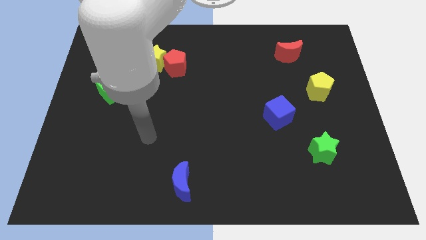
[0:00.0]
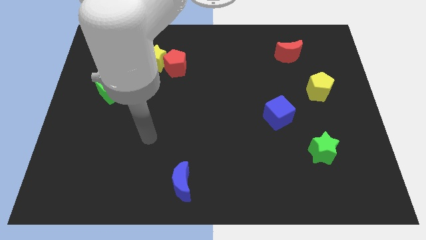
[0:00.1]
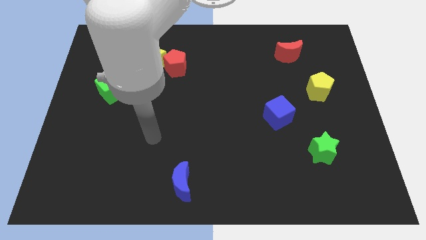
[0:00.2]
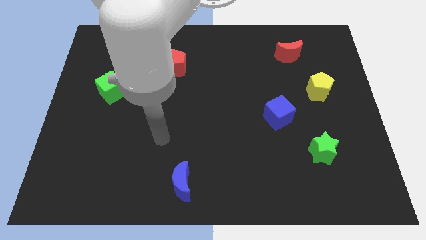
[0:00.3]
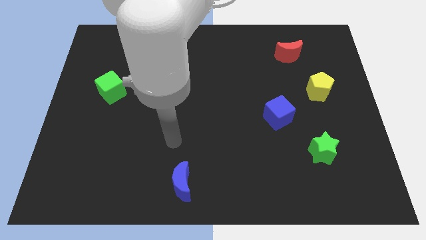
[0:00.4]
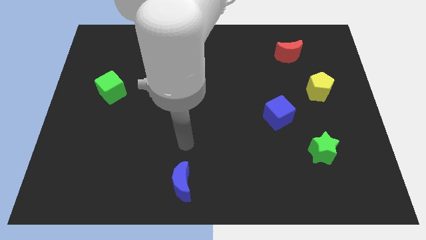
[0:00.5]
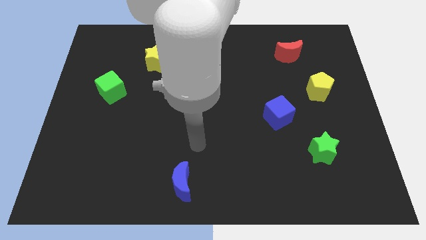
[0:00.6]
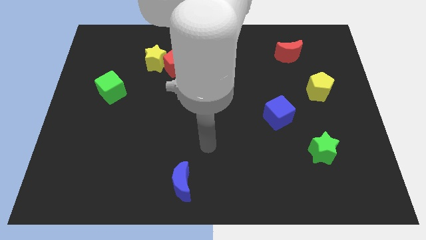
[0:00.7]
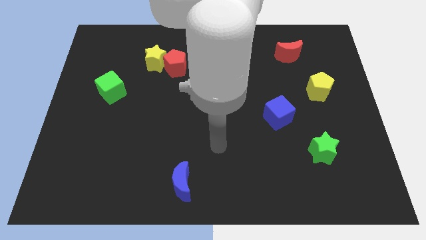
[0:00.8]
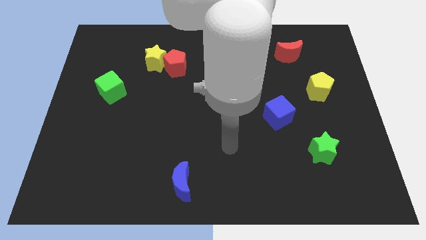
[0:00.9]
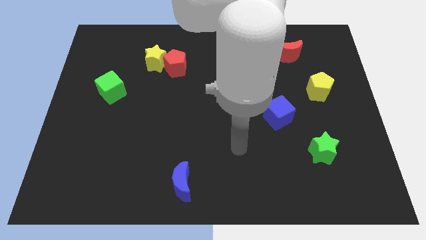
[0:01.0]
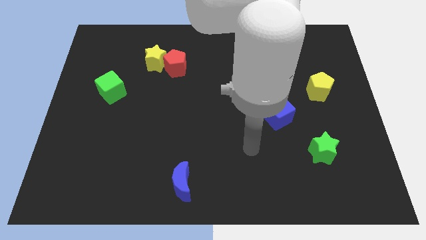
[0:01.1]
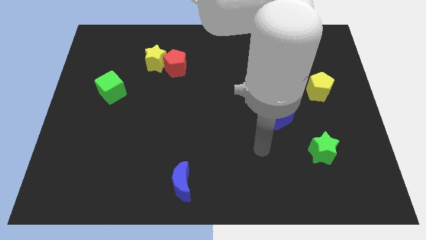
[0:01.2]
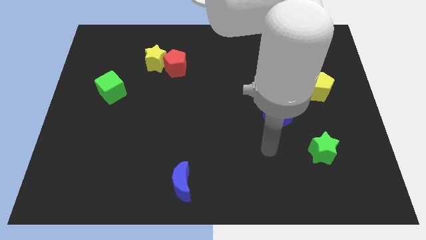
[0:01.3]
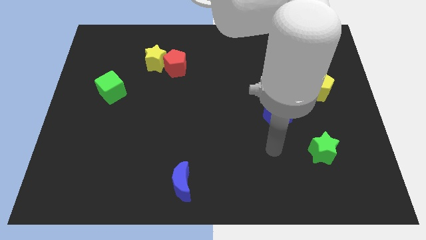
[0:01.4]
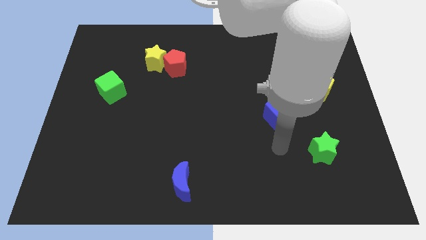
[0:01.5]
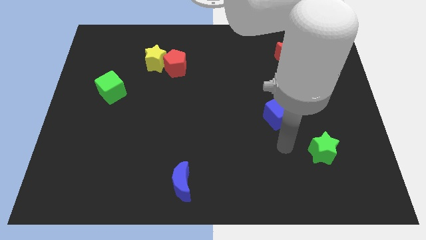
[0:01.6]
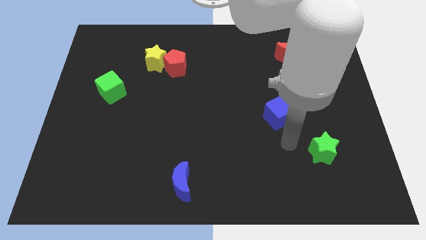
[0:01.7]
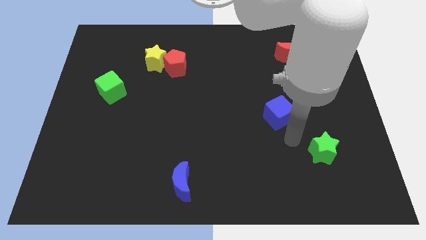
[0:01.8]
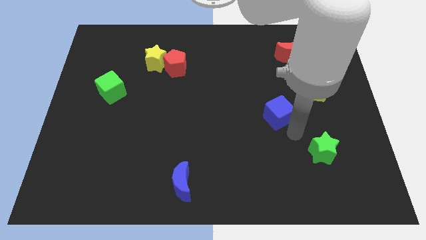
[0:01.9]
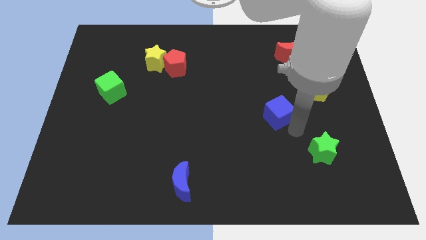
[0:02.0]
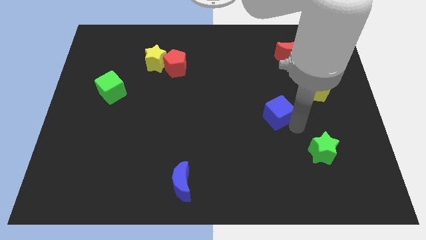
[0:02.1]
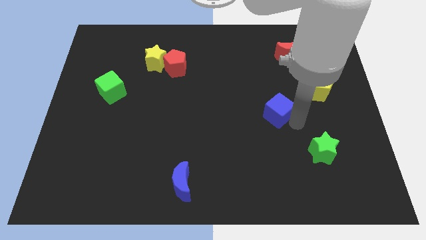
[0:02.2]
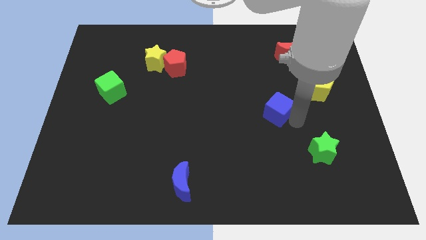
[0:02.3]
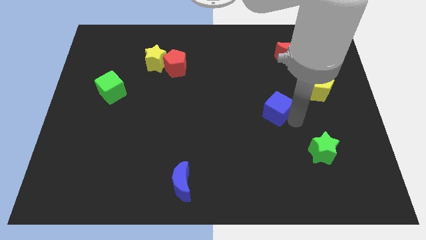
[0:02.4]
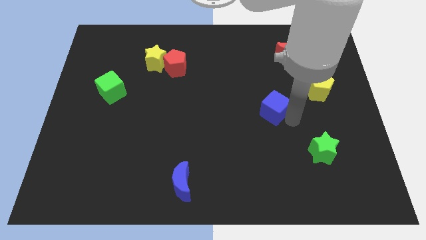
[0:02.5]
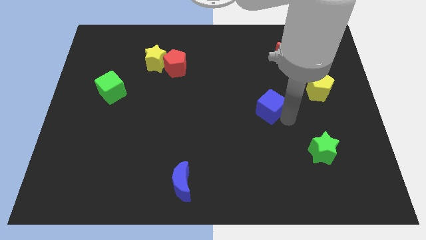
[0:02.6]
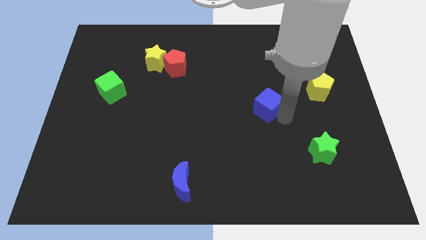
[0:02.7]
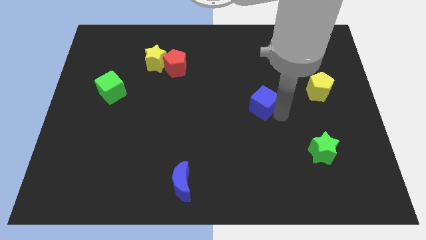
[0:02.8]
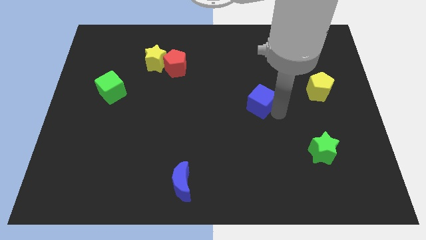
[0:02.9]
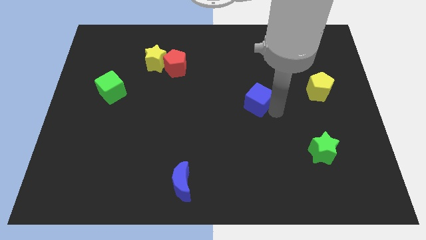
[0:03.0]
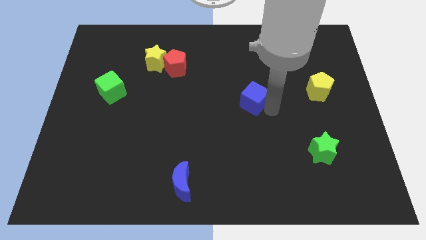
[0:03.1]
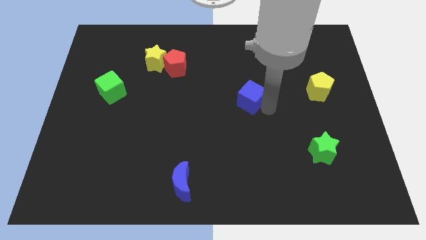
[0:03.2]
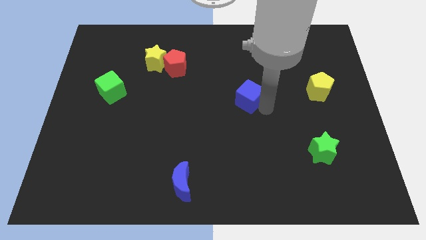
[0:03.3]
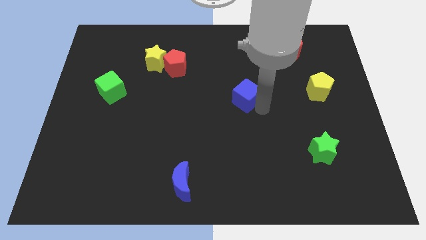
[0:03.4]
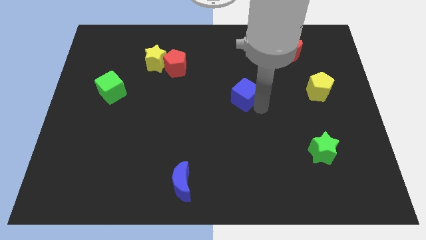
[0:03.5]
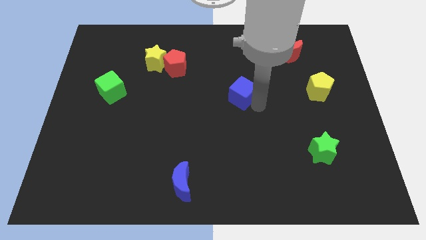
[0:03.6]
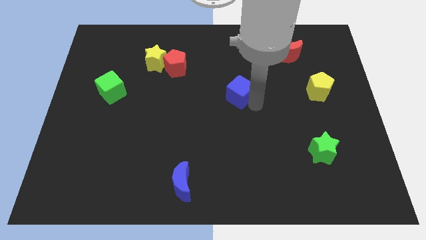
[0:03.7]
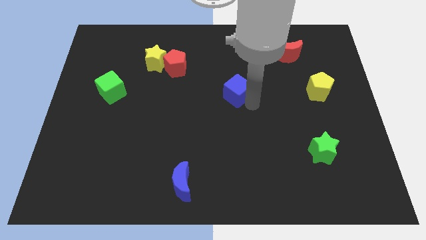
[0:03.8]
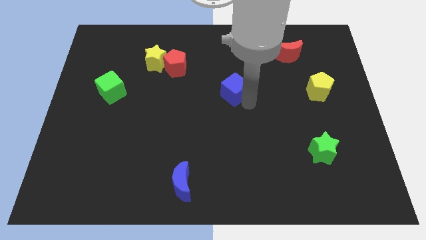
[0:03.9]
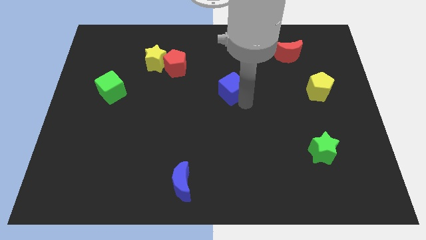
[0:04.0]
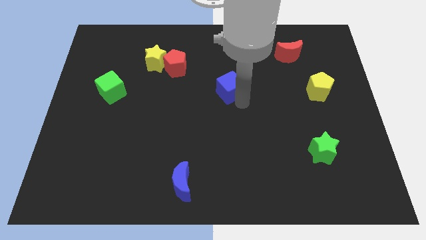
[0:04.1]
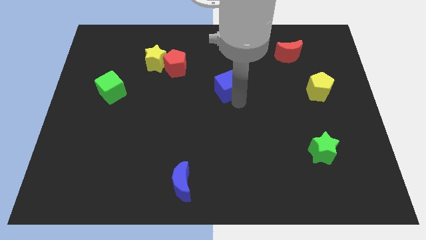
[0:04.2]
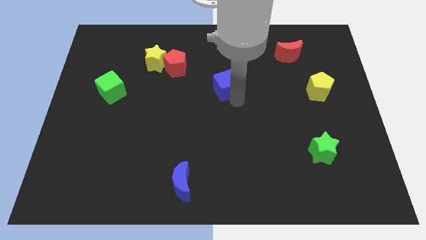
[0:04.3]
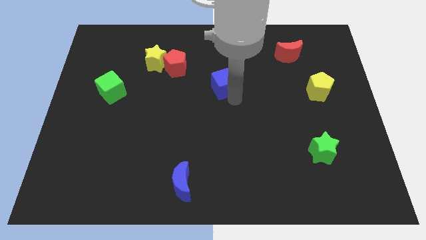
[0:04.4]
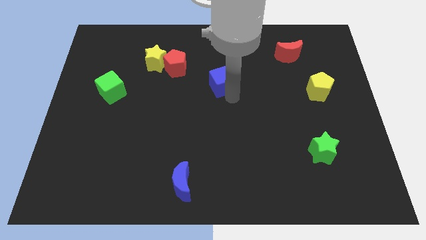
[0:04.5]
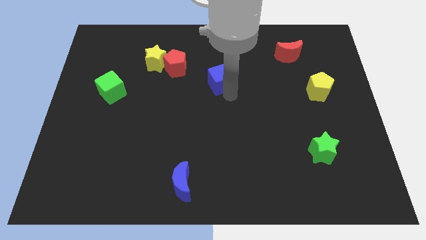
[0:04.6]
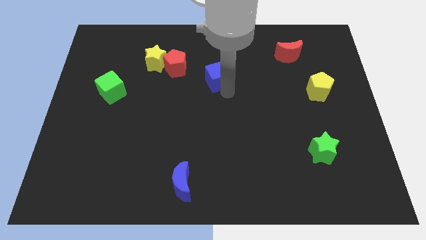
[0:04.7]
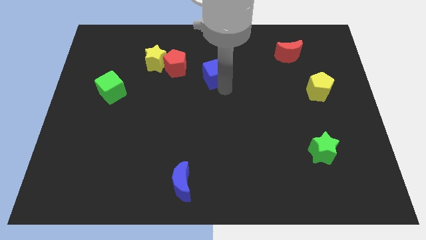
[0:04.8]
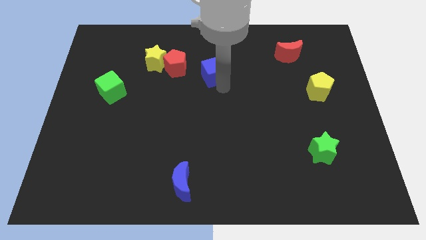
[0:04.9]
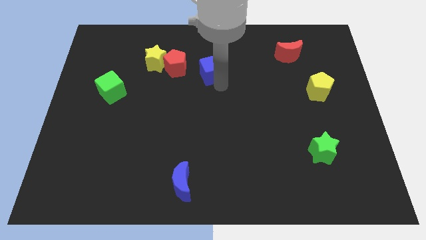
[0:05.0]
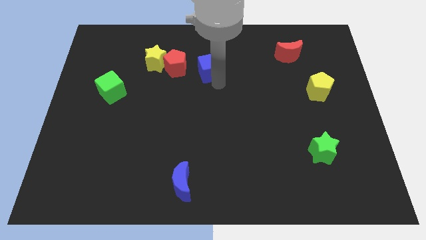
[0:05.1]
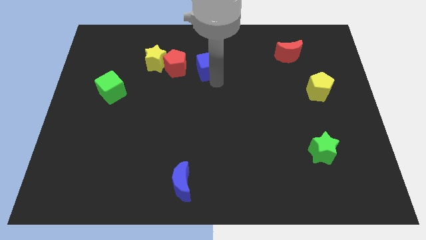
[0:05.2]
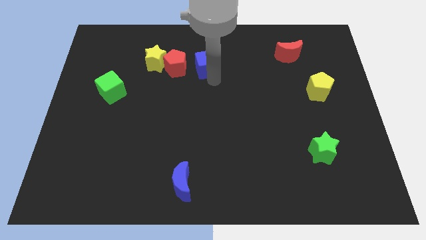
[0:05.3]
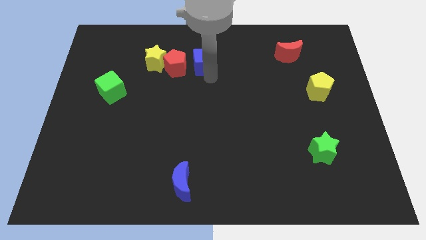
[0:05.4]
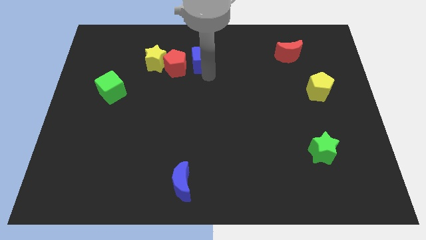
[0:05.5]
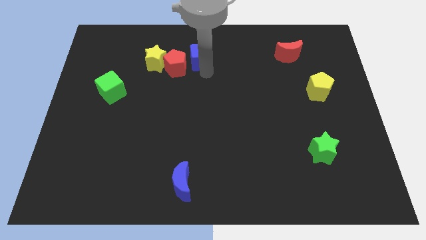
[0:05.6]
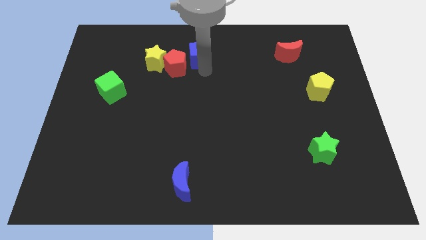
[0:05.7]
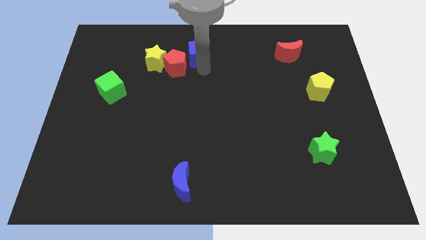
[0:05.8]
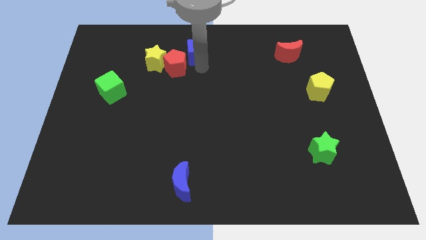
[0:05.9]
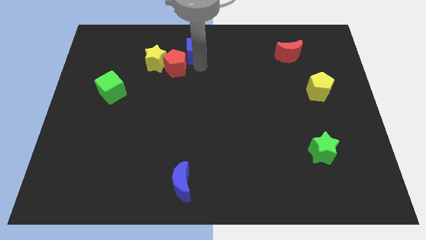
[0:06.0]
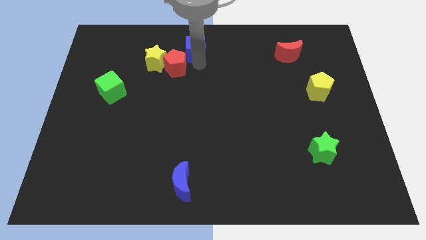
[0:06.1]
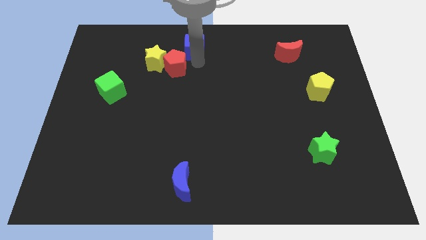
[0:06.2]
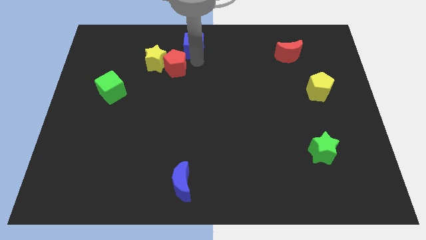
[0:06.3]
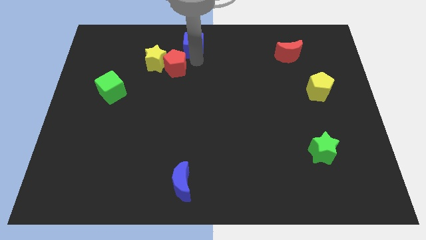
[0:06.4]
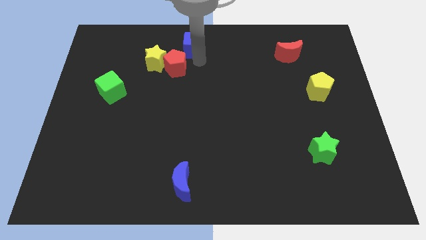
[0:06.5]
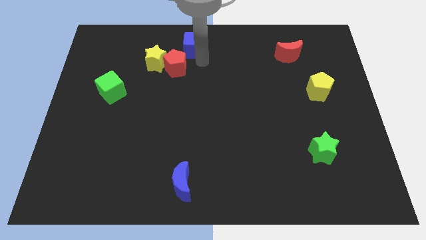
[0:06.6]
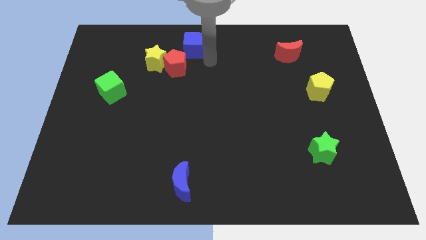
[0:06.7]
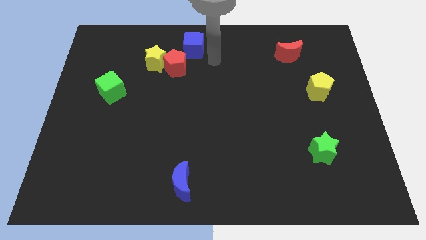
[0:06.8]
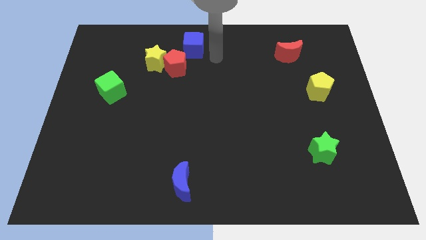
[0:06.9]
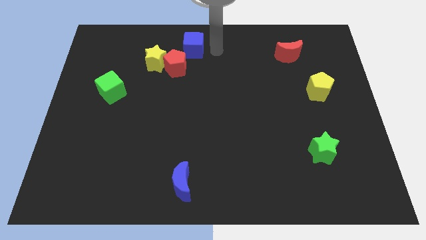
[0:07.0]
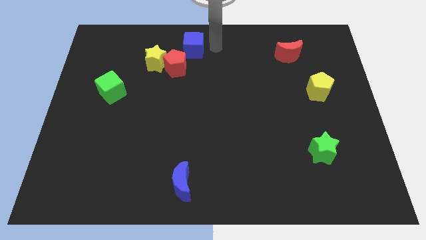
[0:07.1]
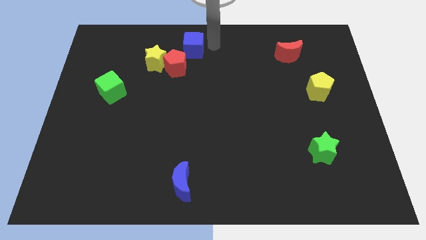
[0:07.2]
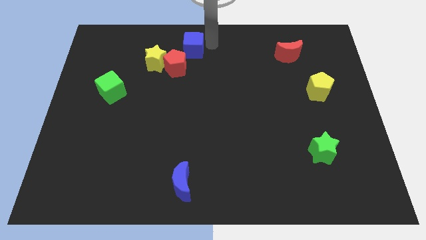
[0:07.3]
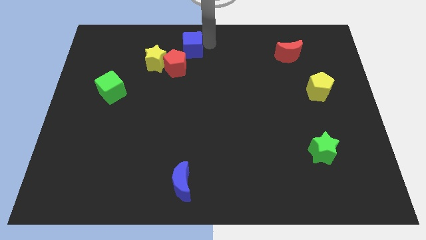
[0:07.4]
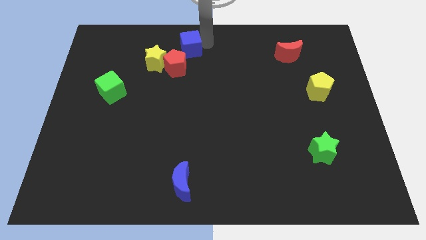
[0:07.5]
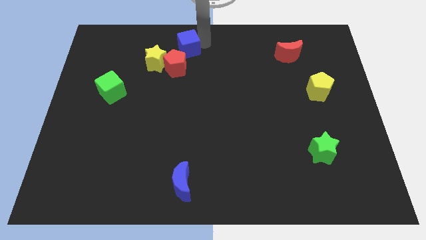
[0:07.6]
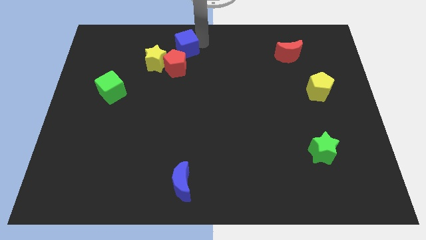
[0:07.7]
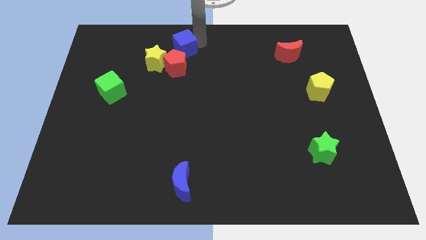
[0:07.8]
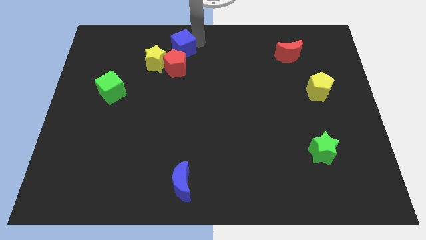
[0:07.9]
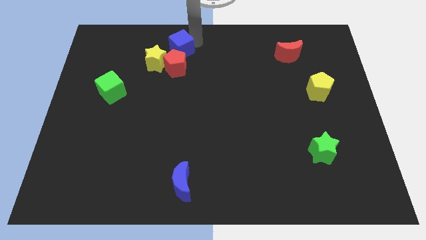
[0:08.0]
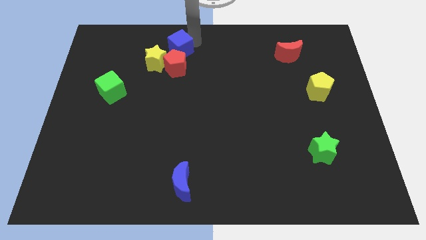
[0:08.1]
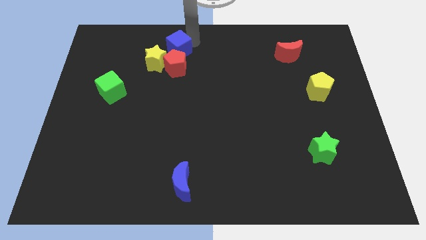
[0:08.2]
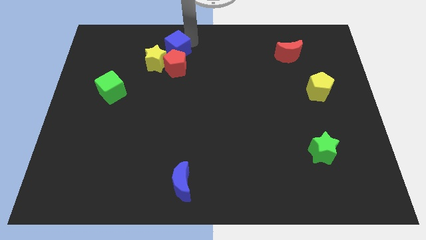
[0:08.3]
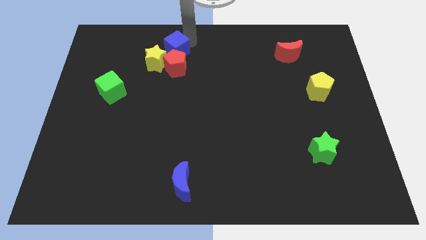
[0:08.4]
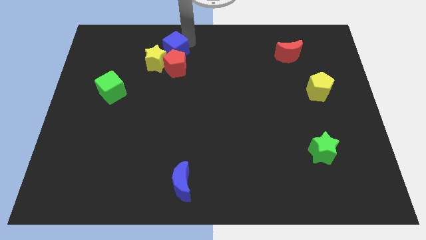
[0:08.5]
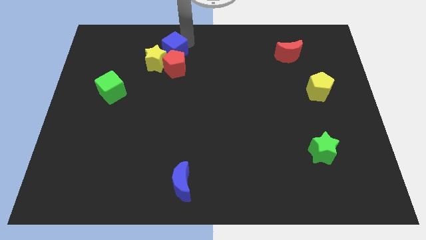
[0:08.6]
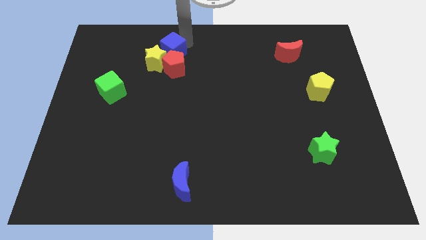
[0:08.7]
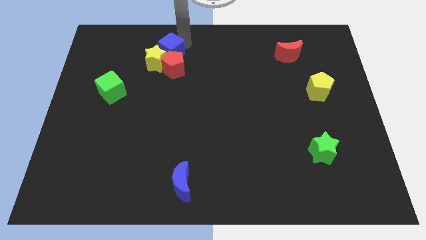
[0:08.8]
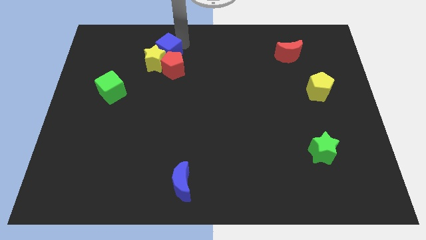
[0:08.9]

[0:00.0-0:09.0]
put the blue cube next to the yellow star
